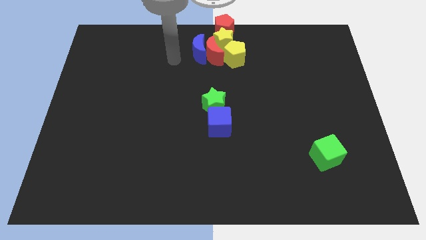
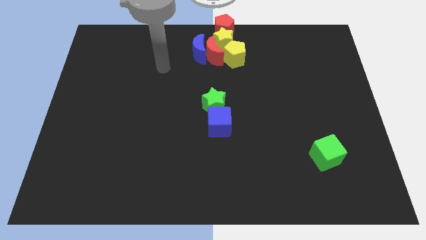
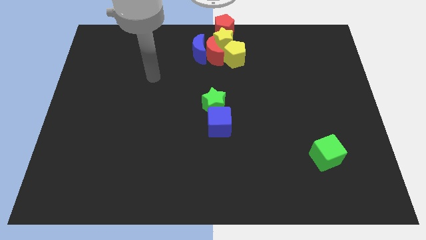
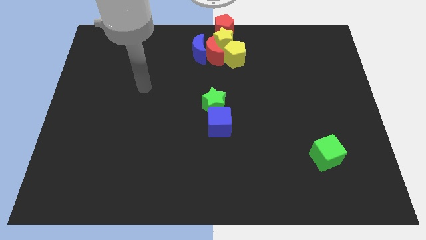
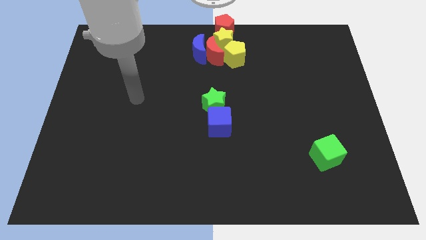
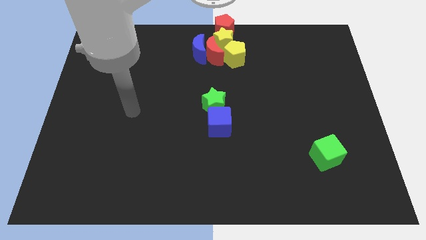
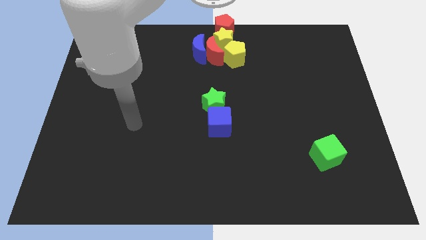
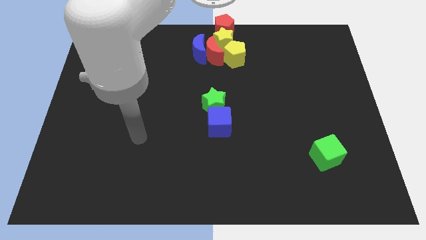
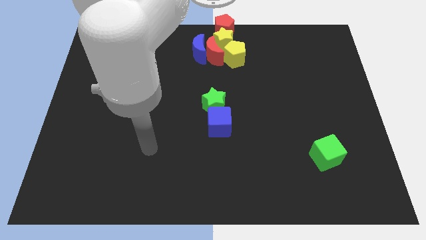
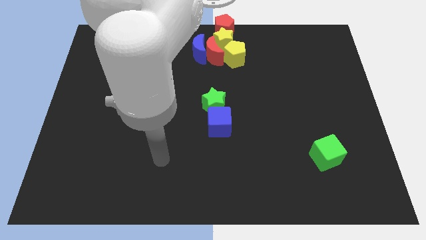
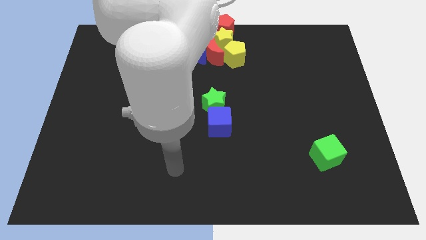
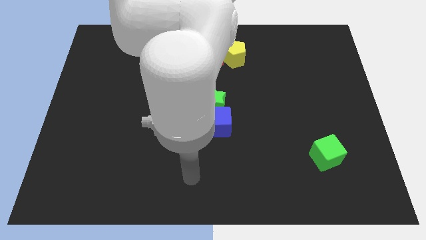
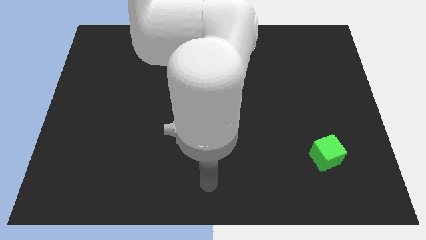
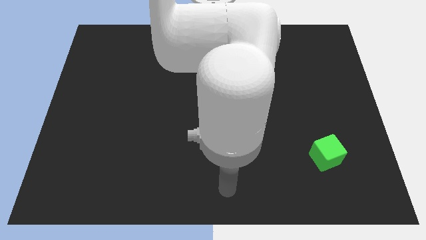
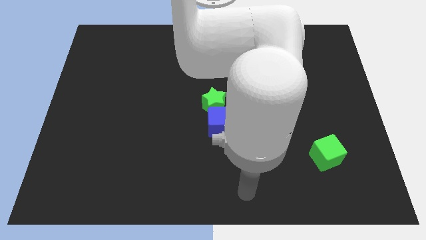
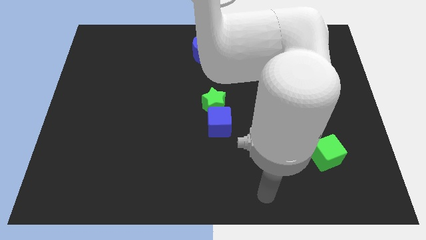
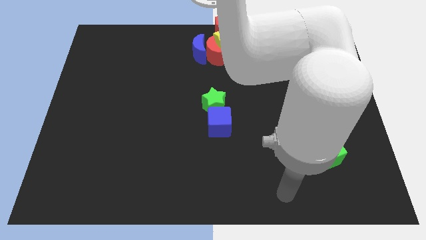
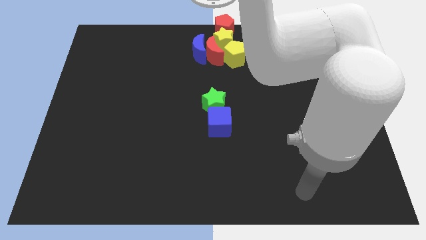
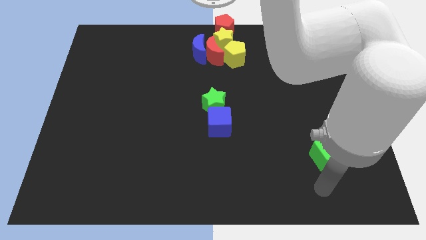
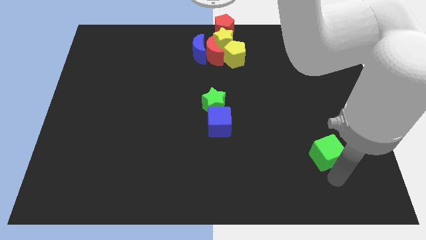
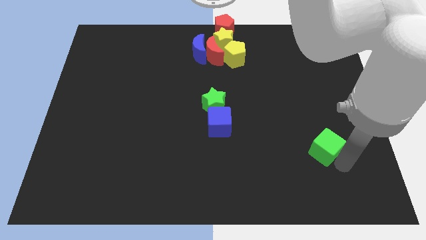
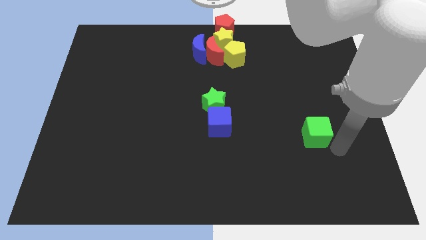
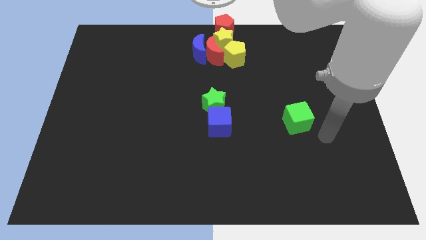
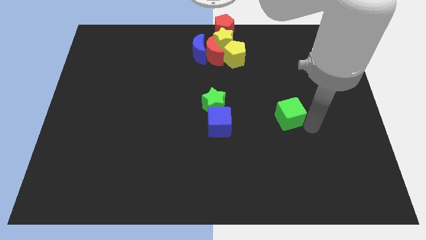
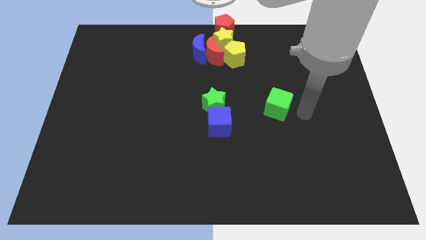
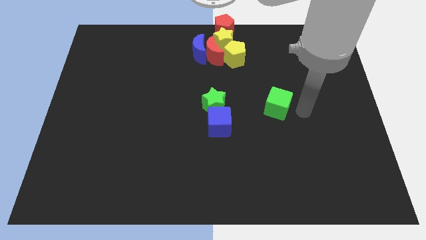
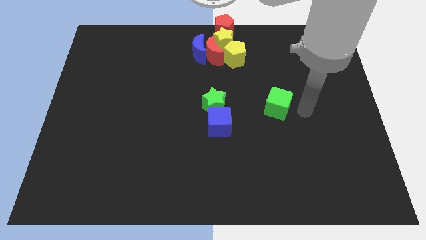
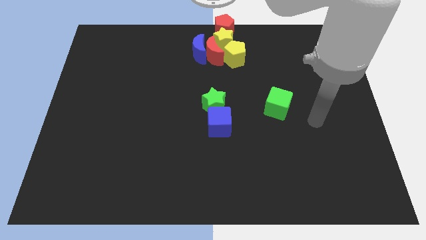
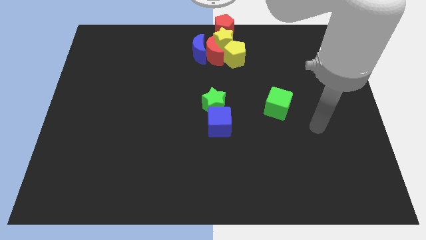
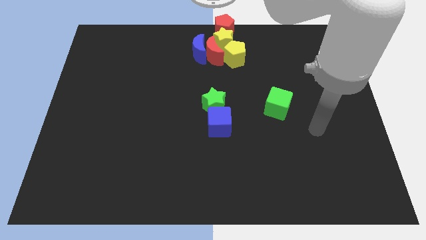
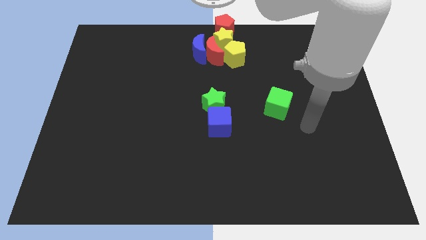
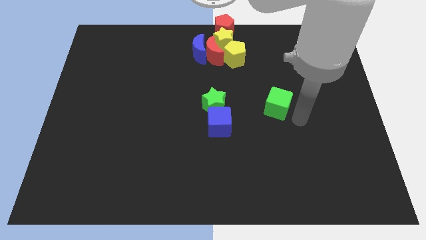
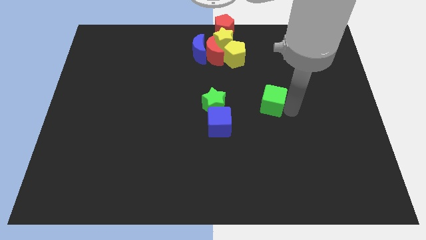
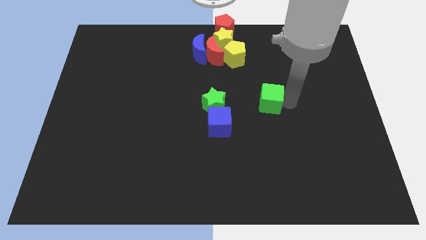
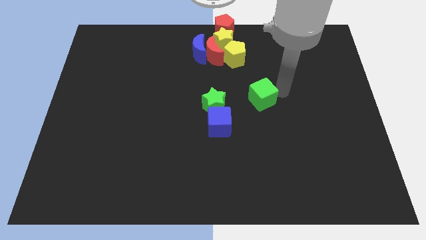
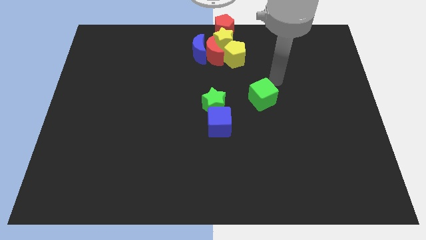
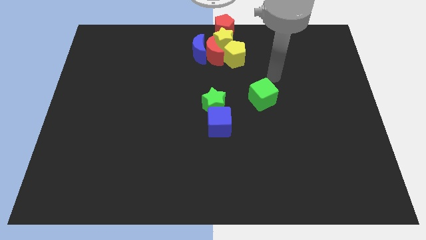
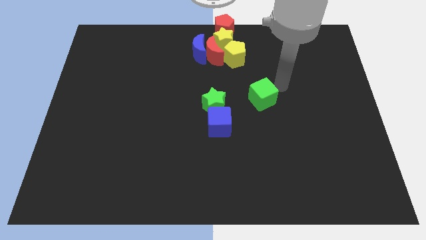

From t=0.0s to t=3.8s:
push the green cube towards the yellow pentagon

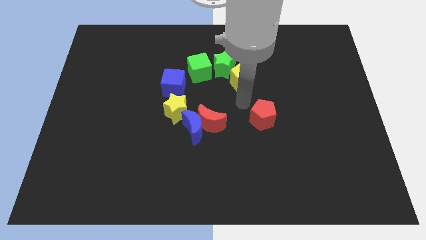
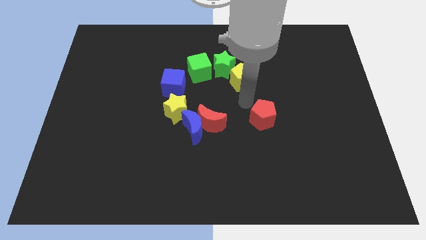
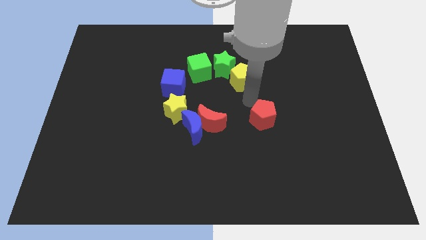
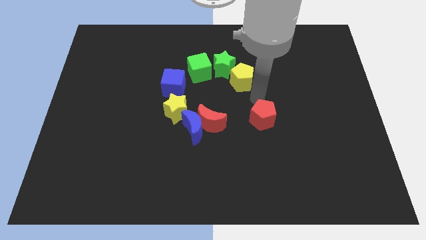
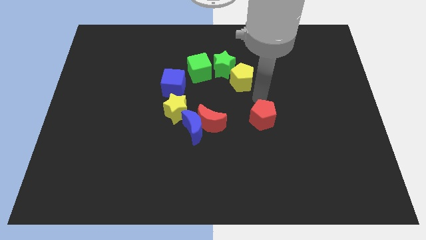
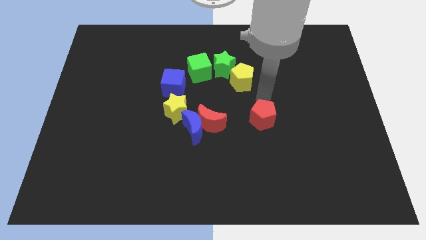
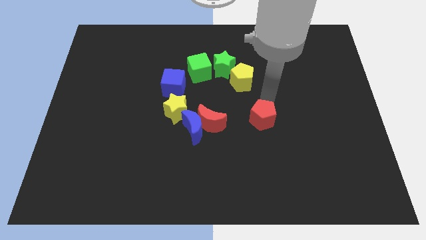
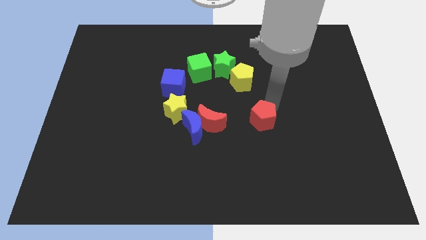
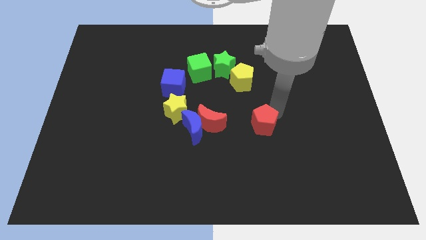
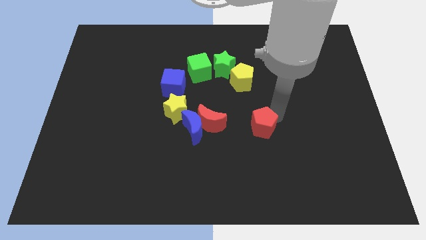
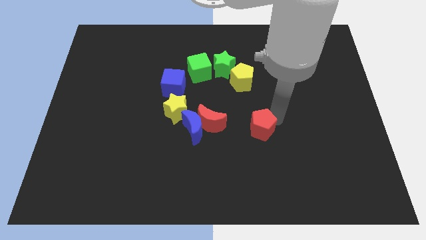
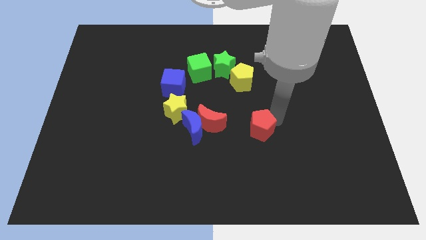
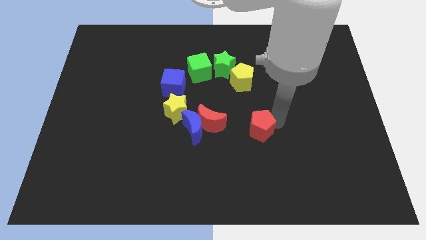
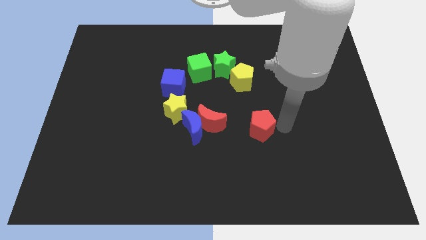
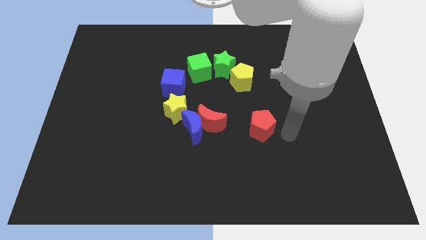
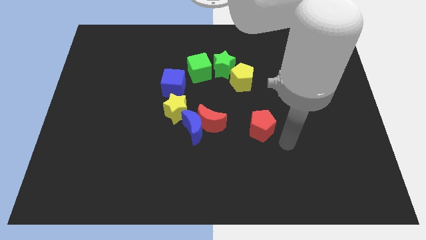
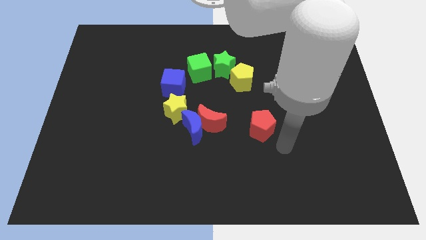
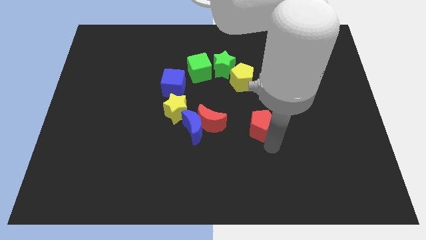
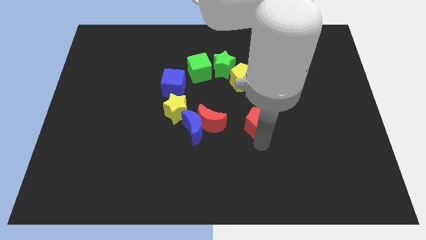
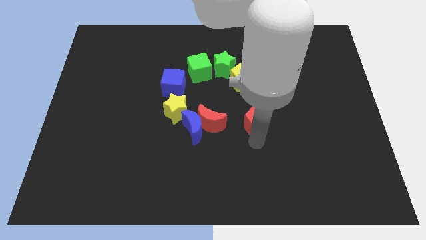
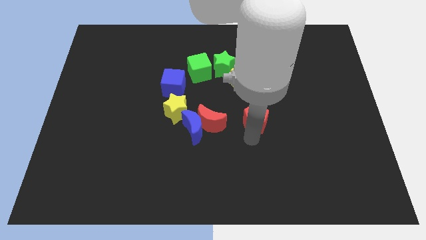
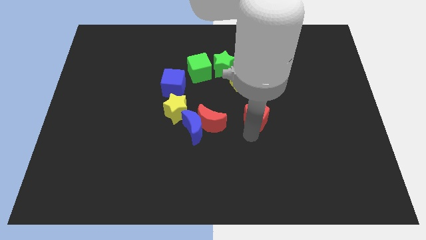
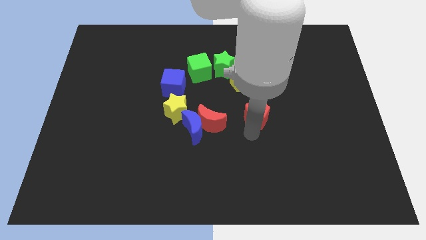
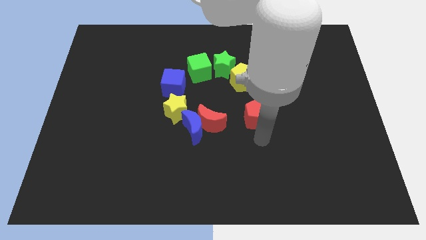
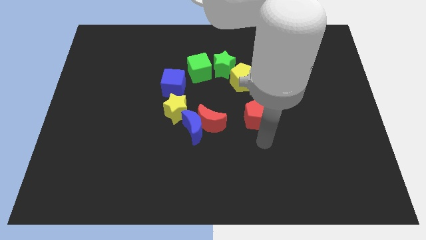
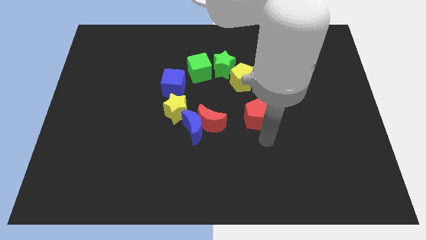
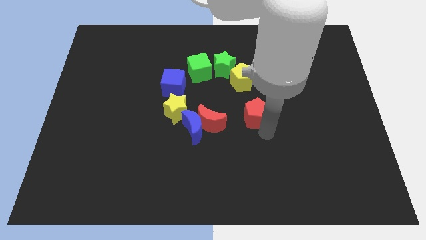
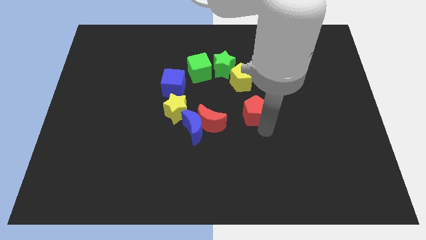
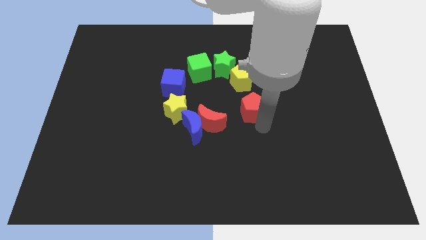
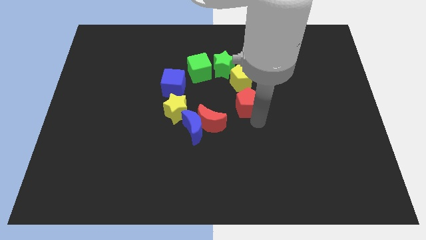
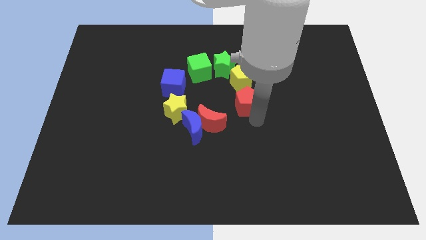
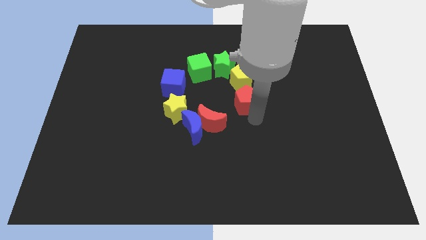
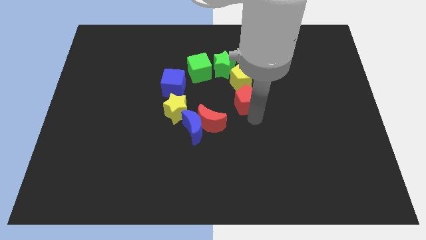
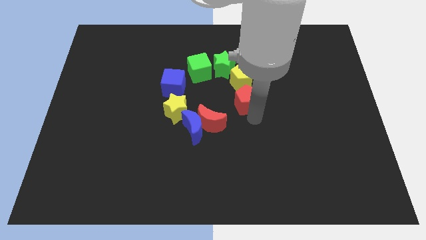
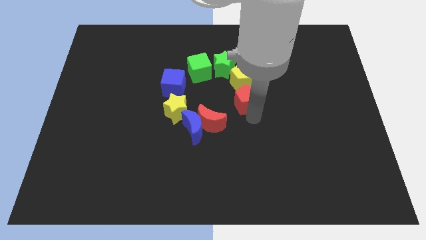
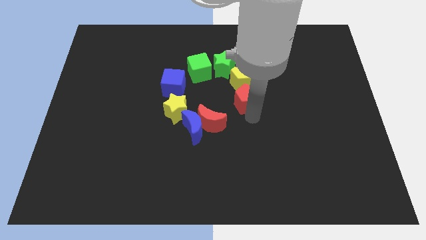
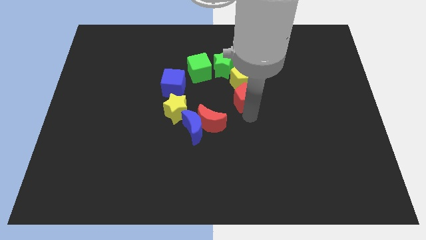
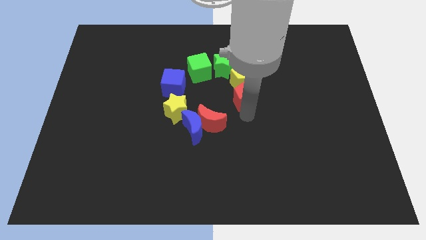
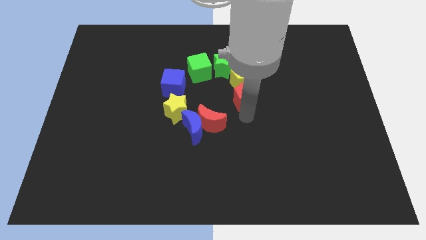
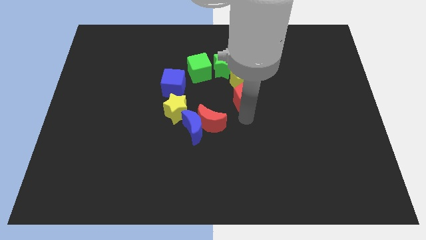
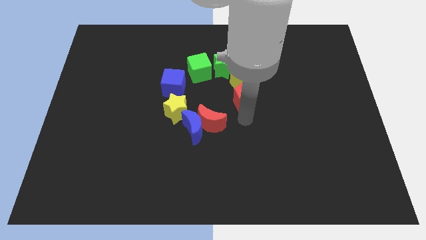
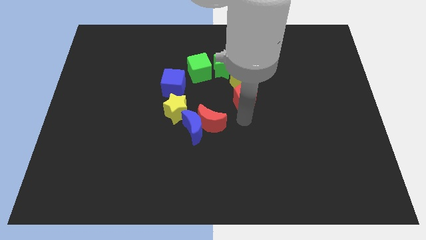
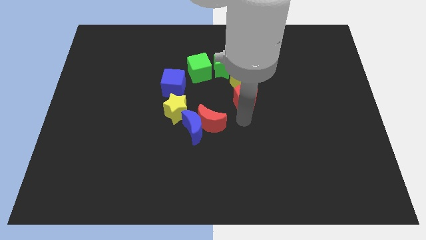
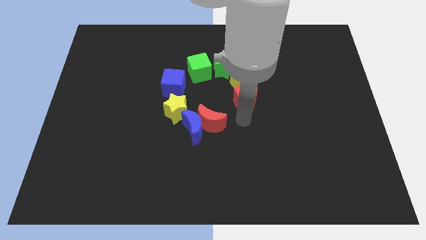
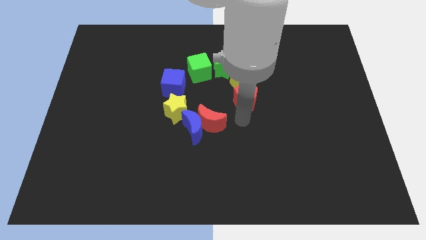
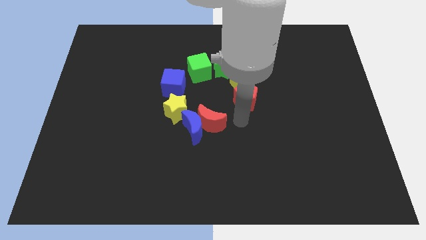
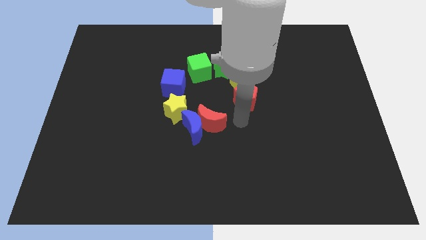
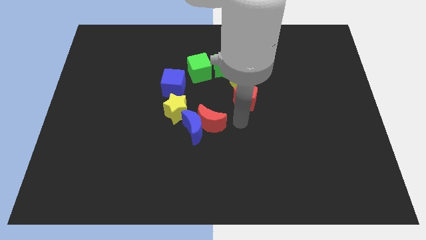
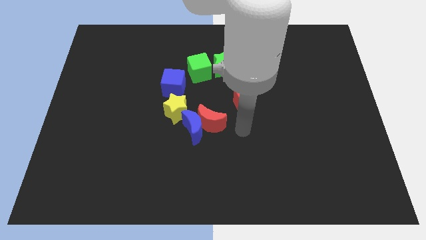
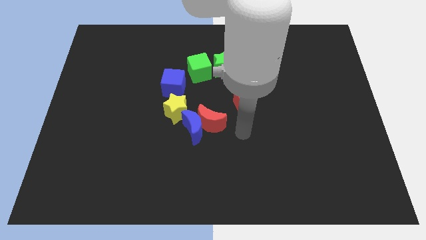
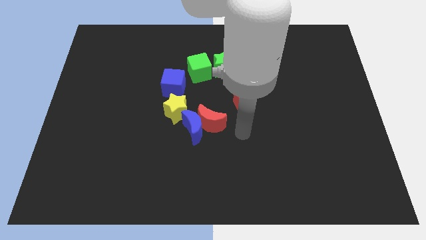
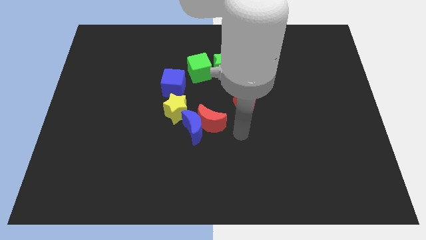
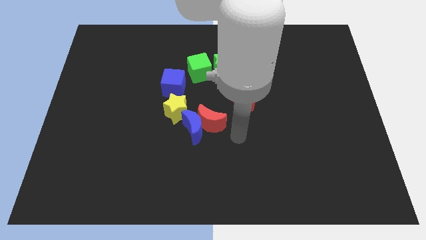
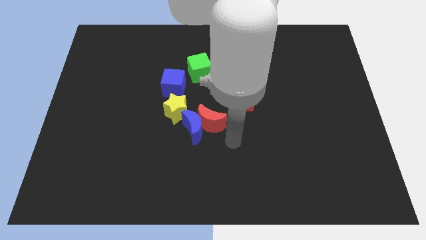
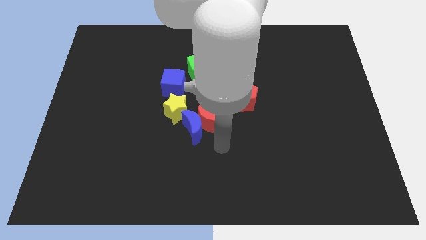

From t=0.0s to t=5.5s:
place the red pentagon below the yellow pentagon
